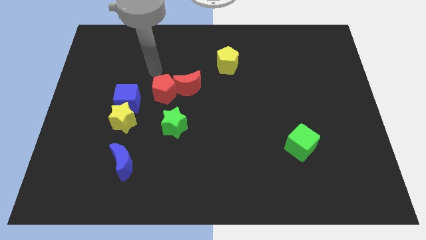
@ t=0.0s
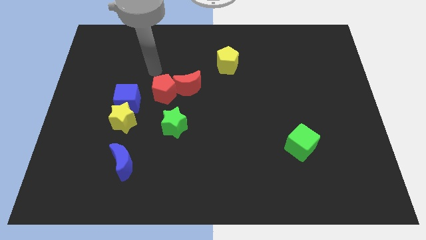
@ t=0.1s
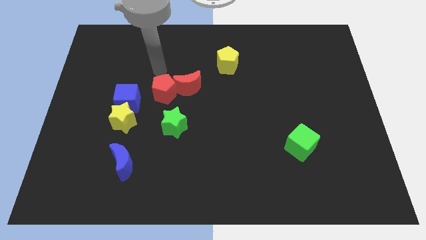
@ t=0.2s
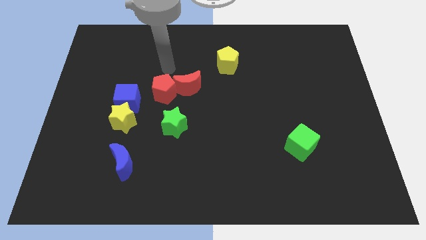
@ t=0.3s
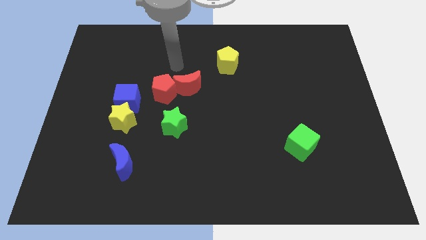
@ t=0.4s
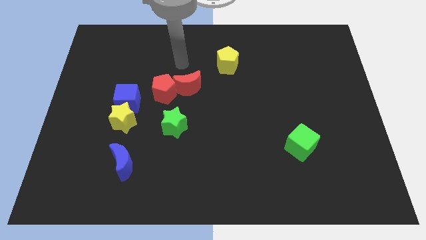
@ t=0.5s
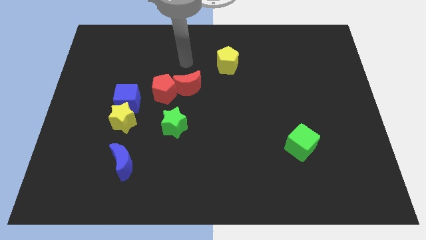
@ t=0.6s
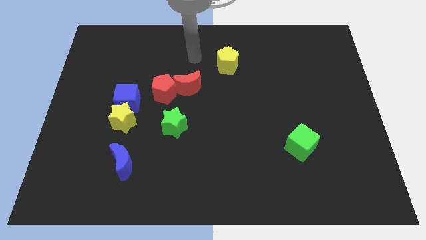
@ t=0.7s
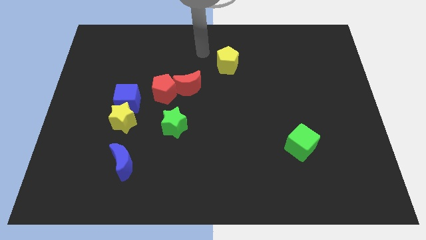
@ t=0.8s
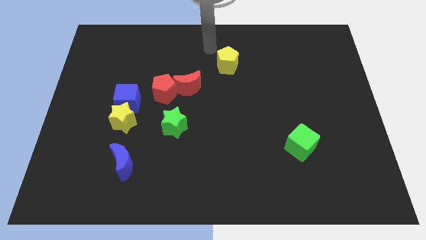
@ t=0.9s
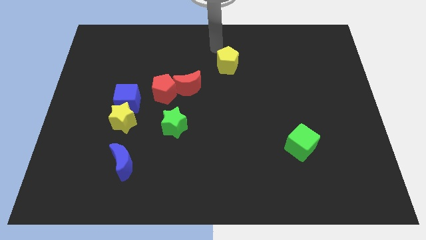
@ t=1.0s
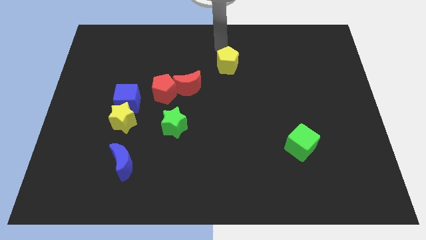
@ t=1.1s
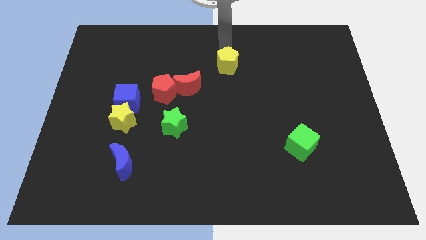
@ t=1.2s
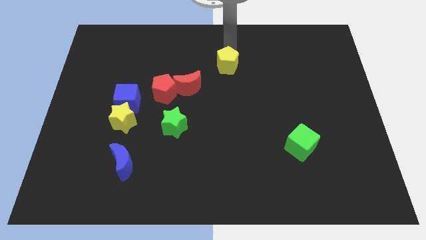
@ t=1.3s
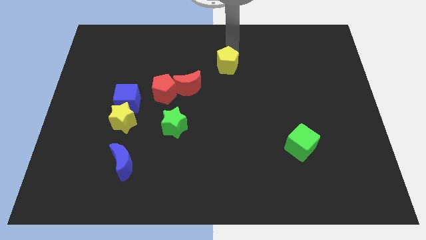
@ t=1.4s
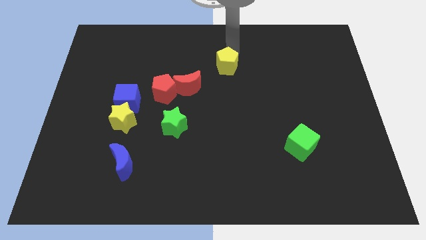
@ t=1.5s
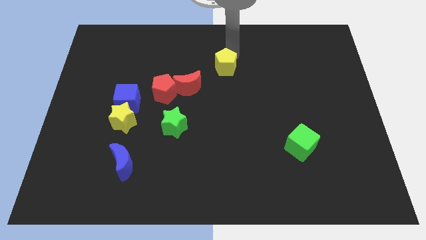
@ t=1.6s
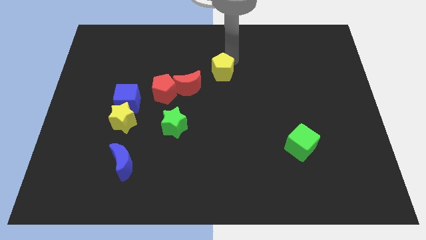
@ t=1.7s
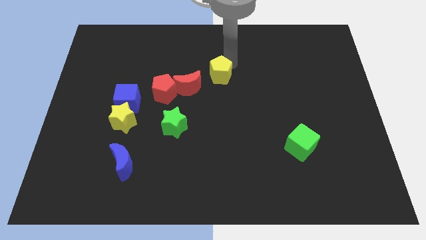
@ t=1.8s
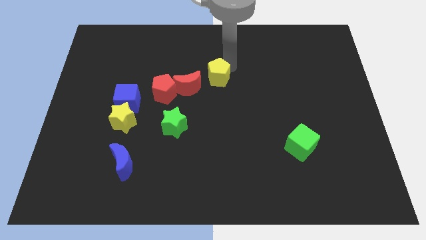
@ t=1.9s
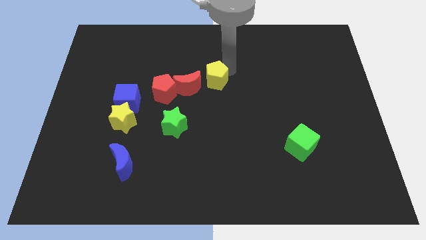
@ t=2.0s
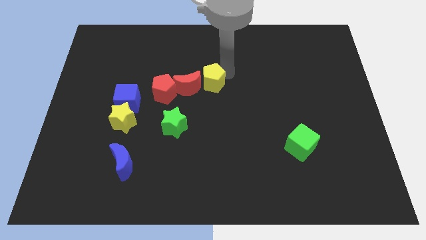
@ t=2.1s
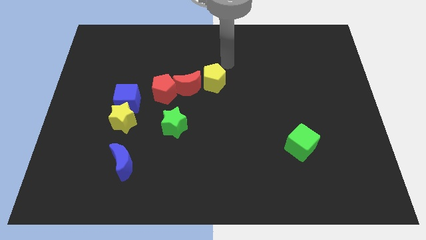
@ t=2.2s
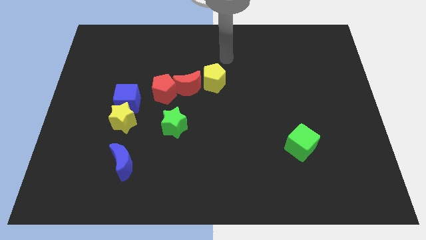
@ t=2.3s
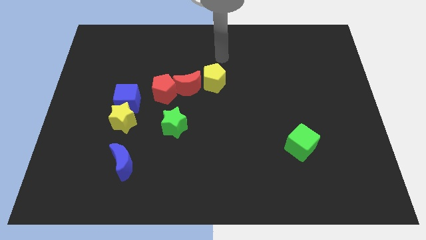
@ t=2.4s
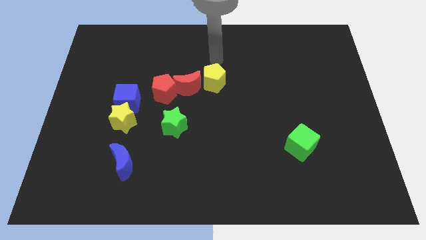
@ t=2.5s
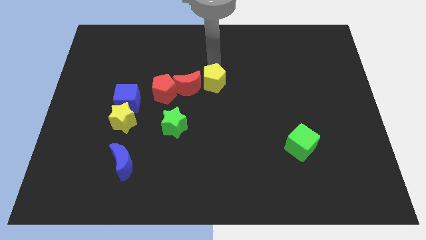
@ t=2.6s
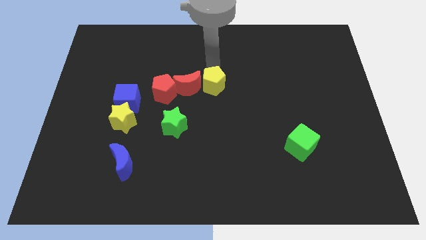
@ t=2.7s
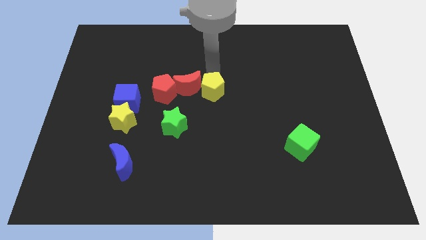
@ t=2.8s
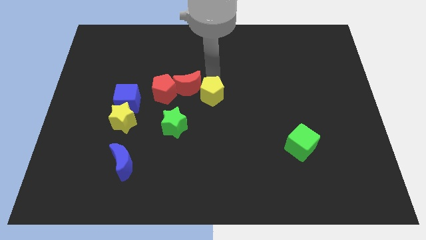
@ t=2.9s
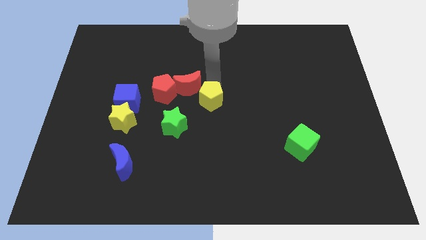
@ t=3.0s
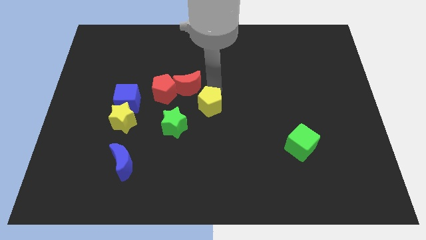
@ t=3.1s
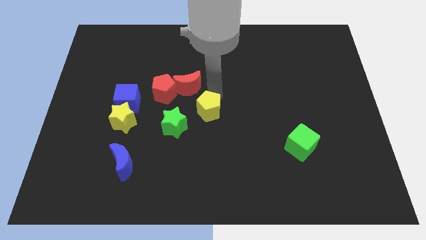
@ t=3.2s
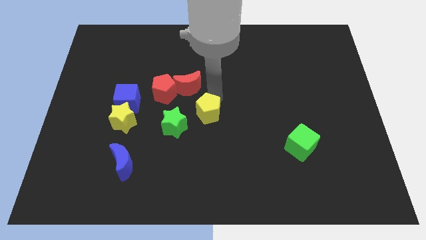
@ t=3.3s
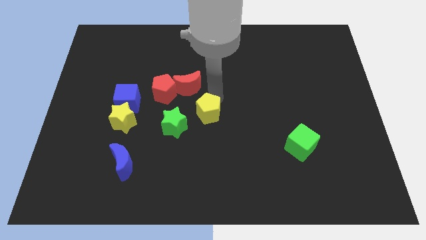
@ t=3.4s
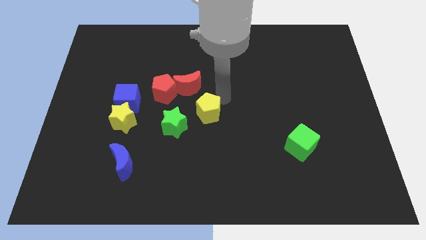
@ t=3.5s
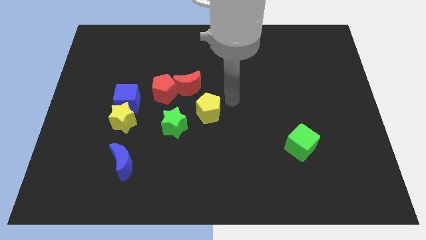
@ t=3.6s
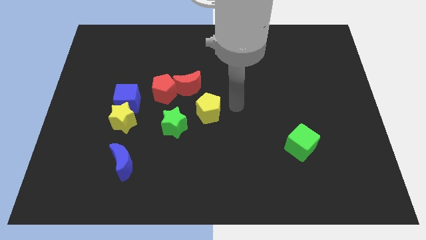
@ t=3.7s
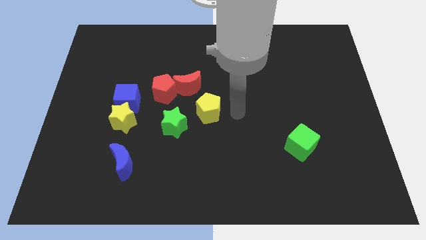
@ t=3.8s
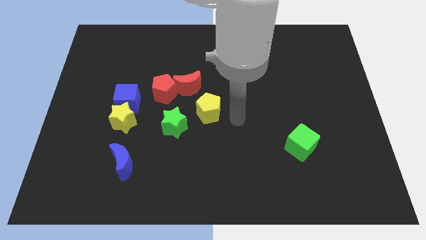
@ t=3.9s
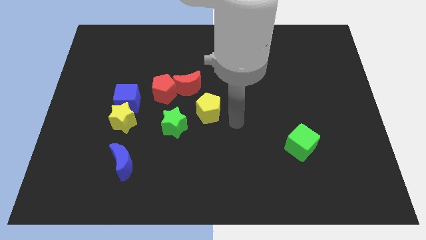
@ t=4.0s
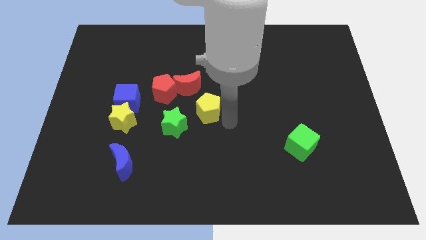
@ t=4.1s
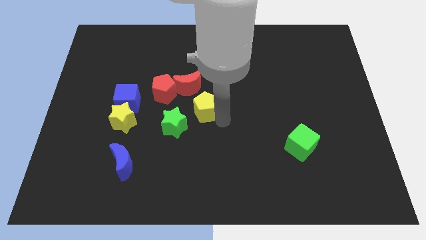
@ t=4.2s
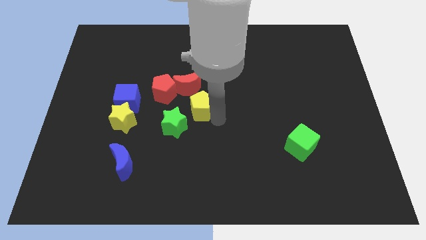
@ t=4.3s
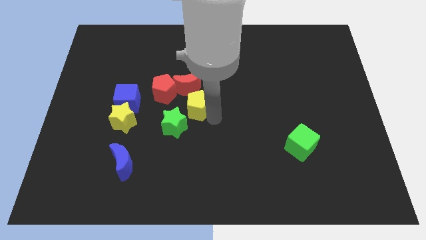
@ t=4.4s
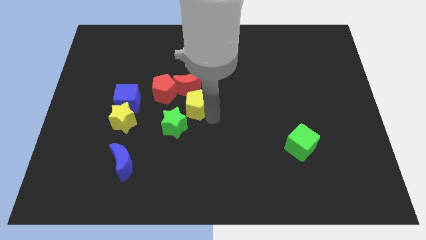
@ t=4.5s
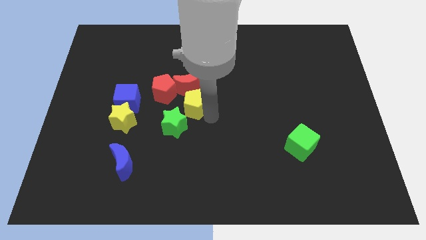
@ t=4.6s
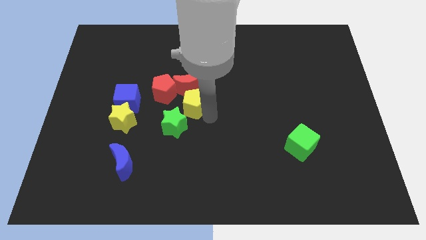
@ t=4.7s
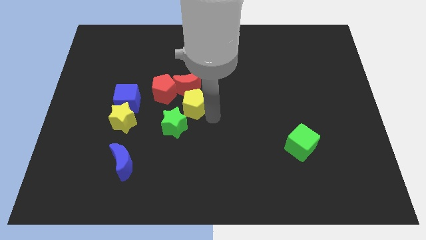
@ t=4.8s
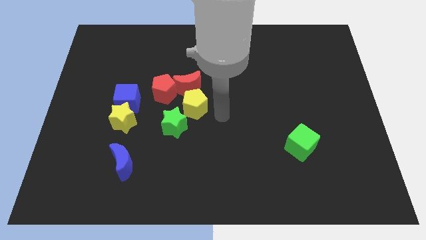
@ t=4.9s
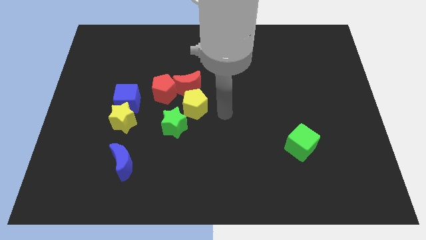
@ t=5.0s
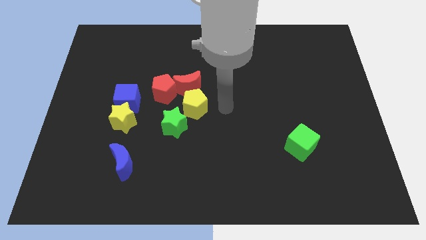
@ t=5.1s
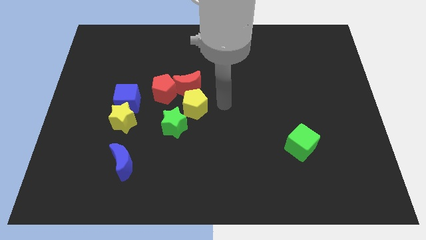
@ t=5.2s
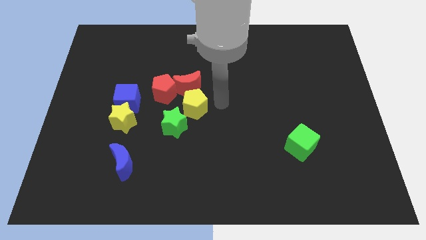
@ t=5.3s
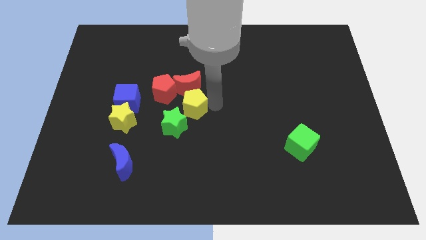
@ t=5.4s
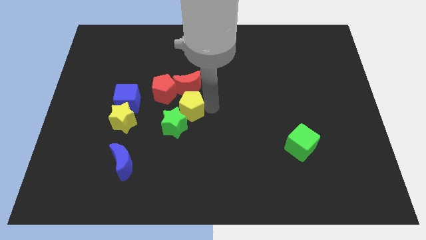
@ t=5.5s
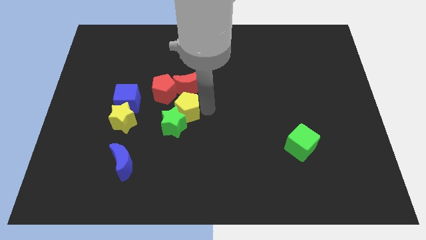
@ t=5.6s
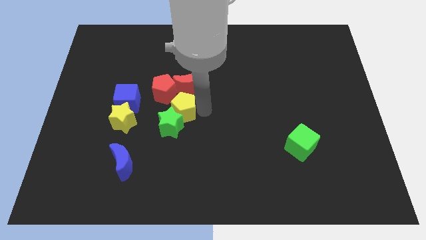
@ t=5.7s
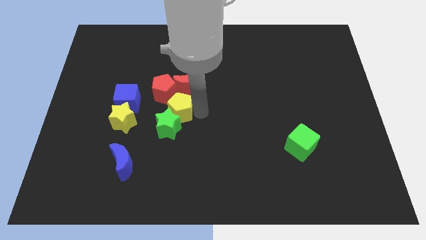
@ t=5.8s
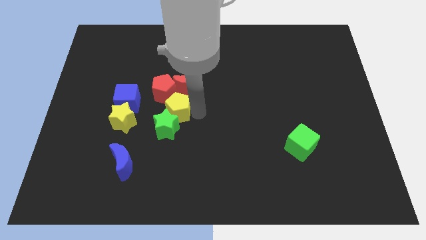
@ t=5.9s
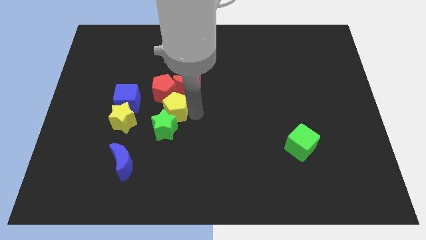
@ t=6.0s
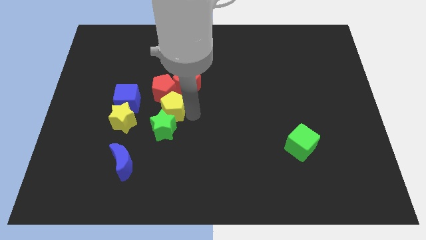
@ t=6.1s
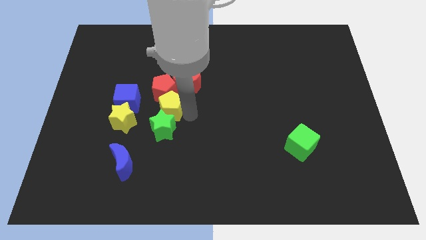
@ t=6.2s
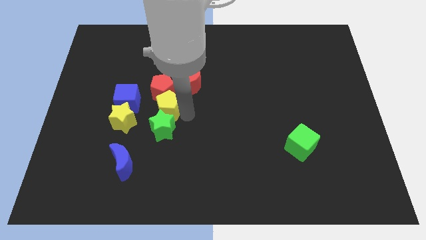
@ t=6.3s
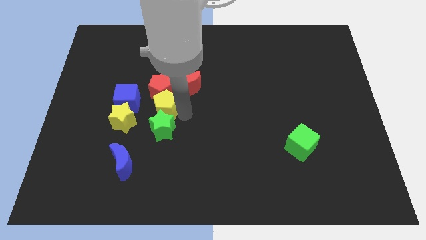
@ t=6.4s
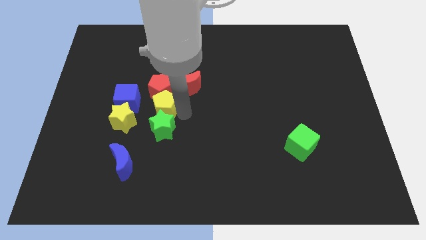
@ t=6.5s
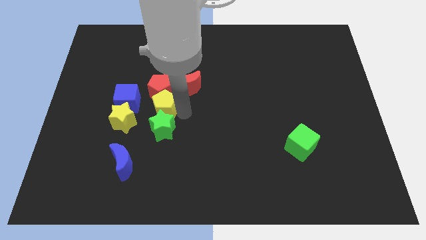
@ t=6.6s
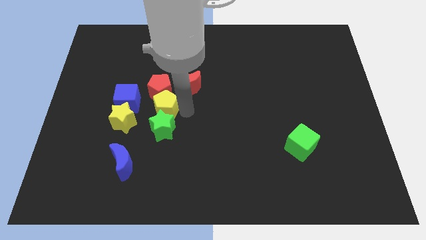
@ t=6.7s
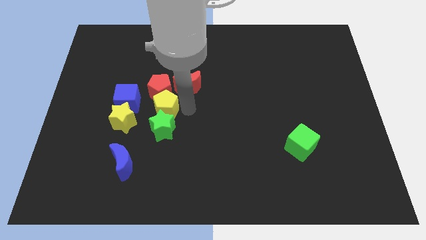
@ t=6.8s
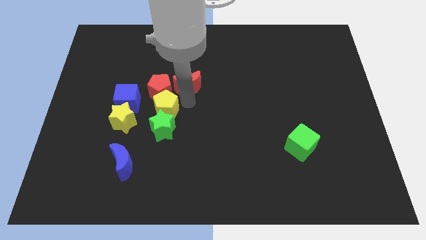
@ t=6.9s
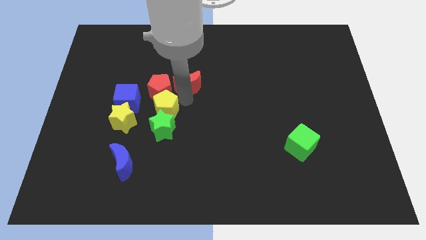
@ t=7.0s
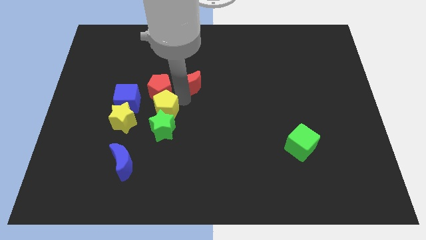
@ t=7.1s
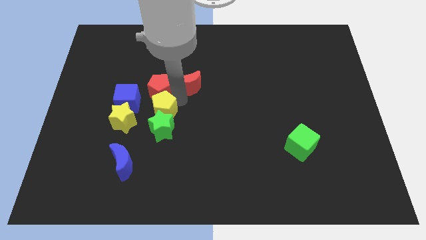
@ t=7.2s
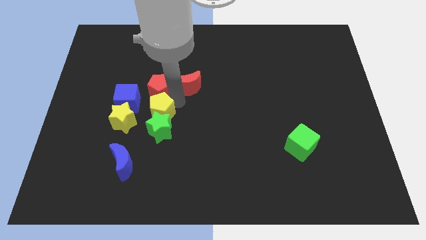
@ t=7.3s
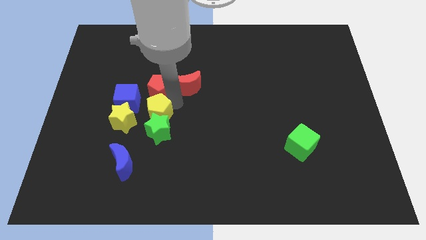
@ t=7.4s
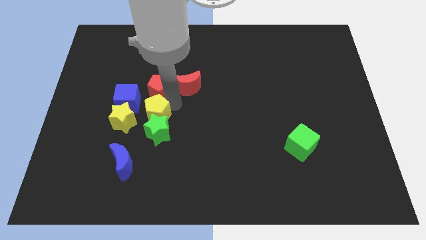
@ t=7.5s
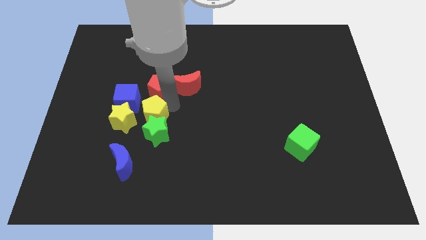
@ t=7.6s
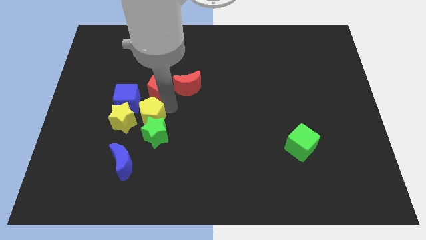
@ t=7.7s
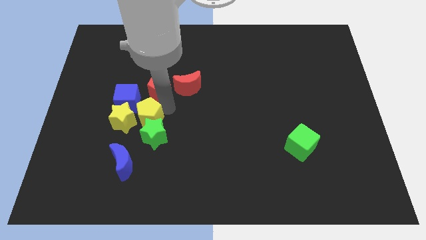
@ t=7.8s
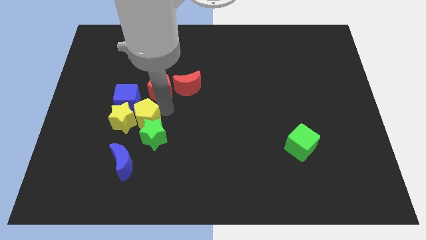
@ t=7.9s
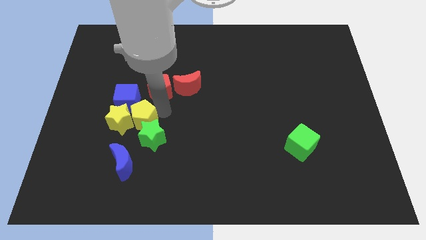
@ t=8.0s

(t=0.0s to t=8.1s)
push the yellow pentagon next to the yellow star

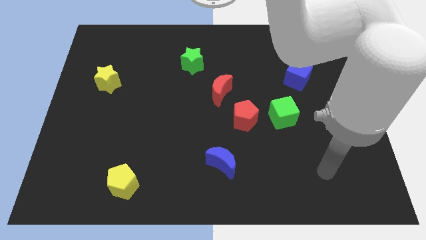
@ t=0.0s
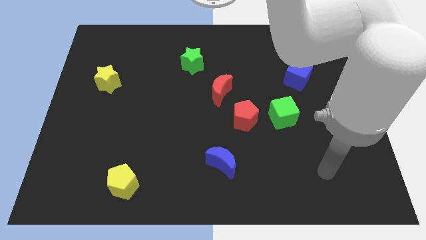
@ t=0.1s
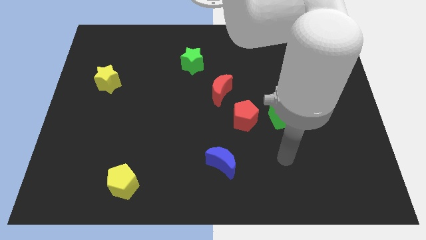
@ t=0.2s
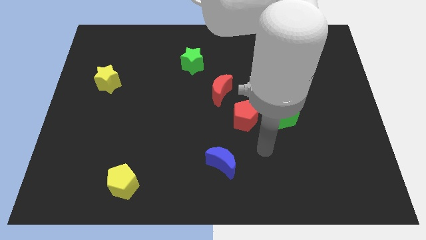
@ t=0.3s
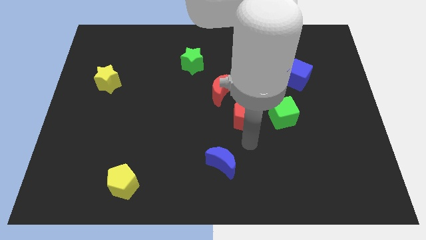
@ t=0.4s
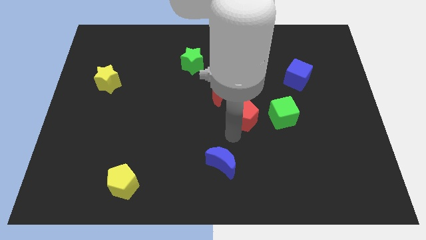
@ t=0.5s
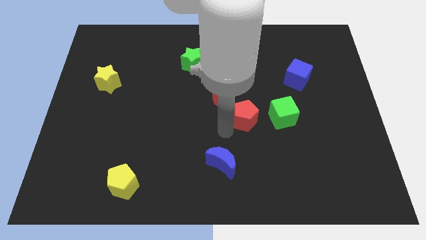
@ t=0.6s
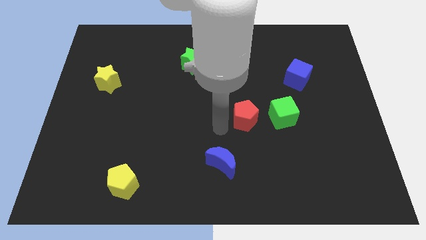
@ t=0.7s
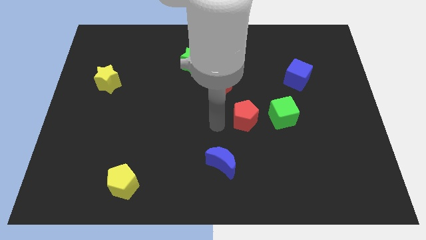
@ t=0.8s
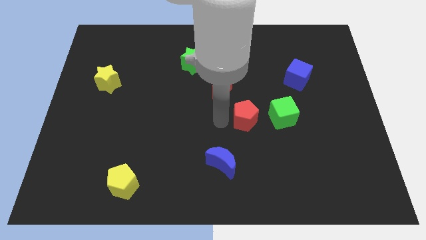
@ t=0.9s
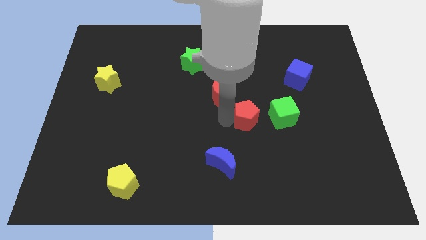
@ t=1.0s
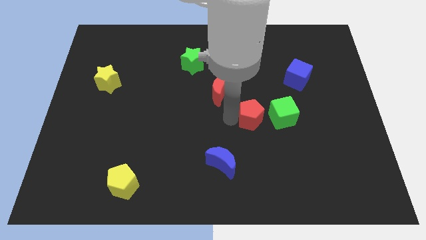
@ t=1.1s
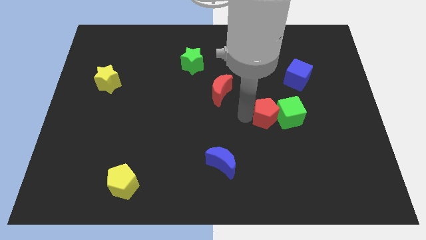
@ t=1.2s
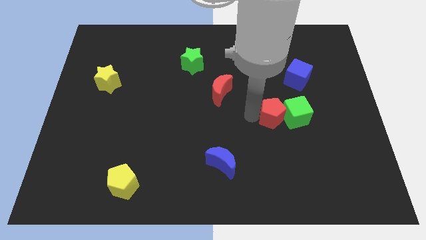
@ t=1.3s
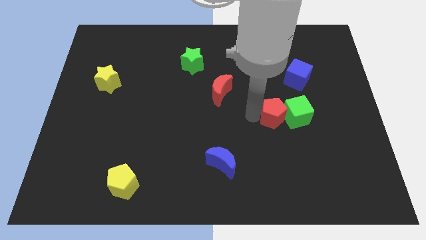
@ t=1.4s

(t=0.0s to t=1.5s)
push the red pentagon close to the green cube
